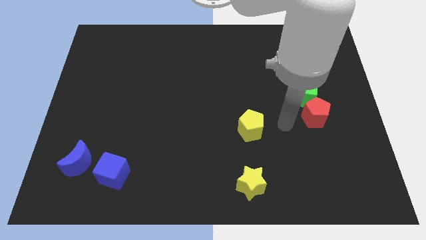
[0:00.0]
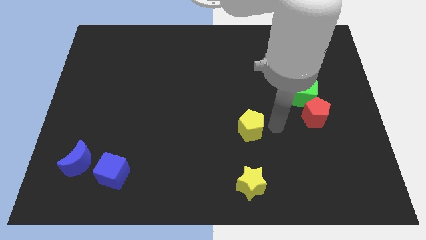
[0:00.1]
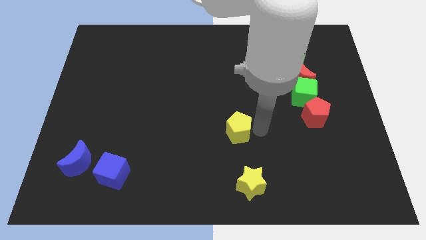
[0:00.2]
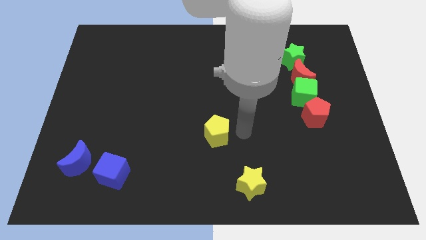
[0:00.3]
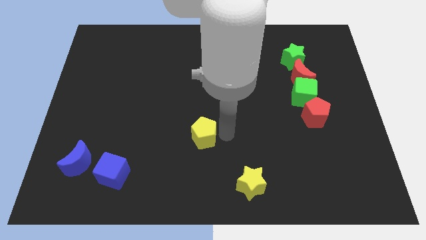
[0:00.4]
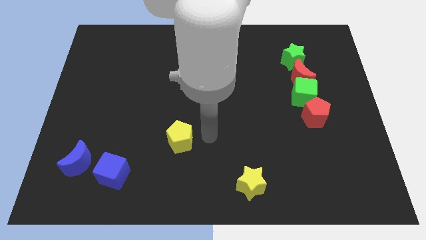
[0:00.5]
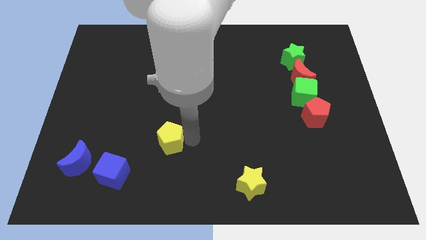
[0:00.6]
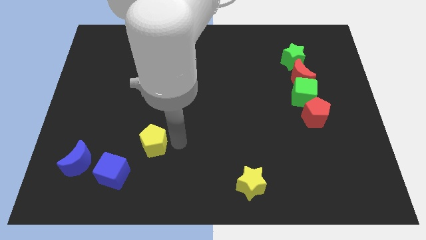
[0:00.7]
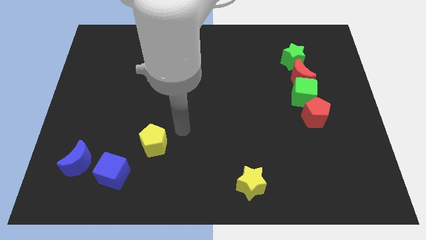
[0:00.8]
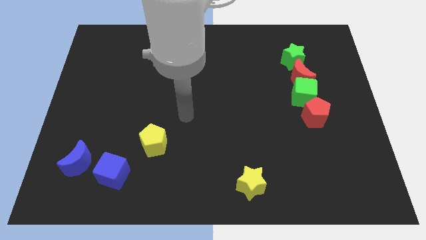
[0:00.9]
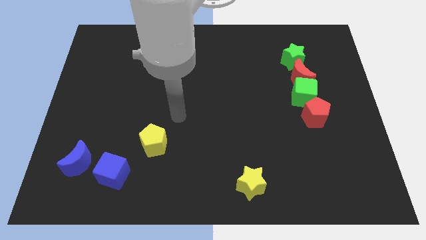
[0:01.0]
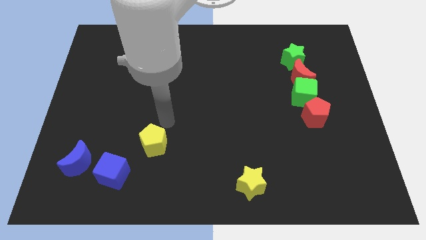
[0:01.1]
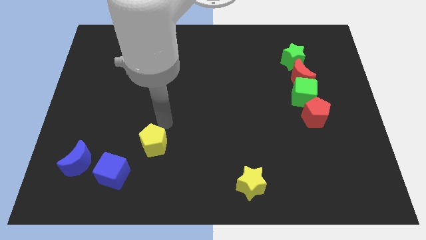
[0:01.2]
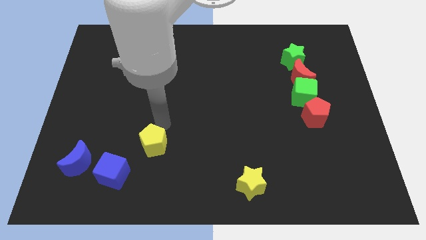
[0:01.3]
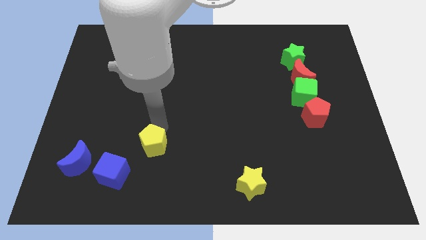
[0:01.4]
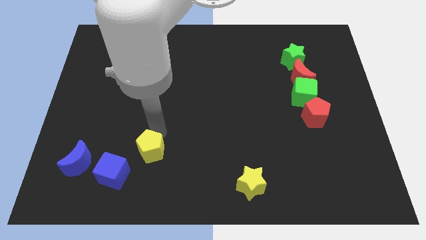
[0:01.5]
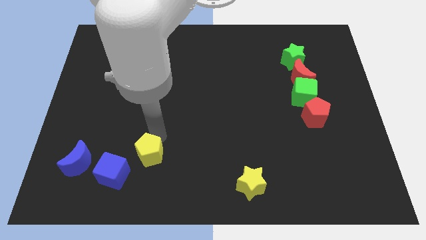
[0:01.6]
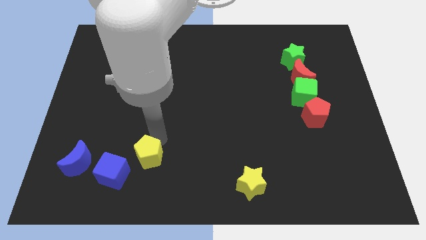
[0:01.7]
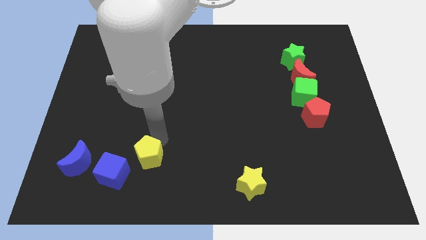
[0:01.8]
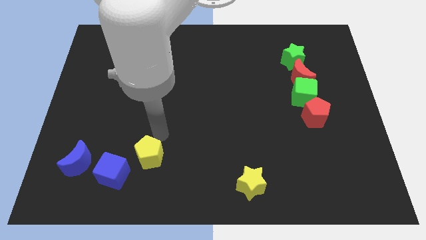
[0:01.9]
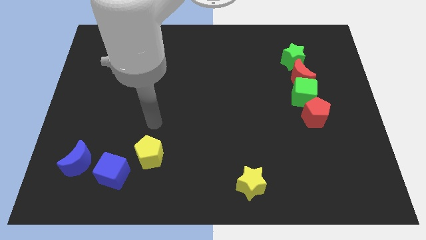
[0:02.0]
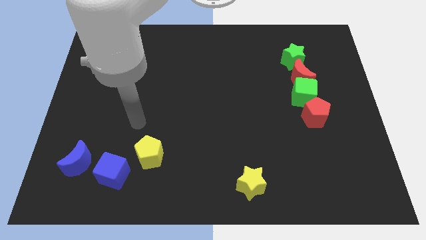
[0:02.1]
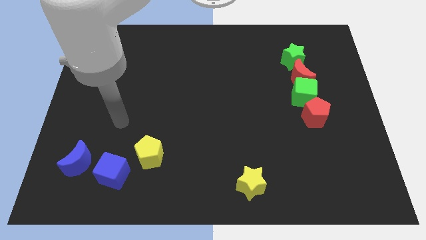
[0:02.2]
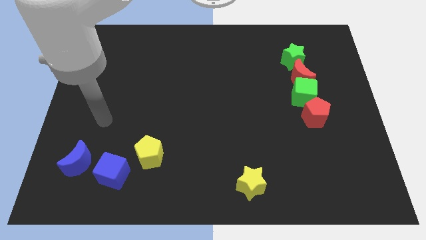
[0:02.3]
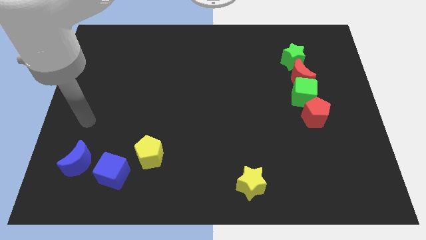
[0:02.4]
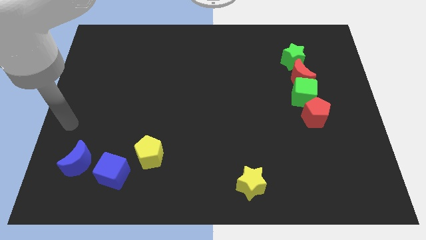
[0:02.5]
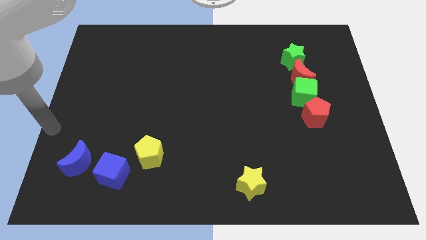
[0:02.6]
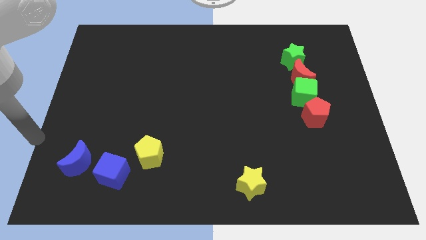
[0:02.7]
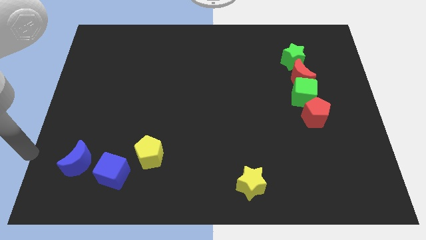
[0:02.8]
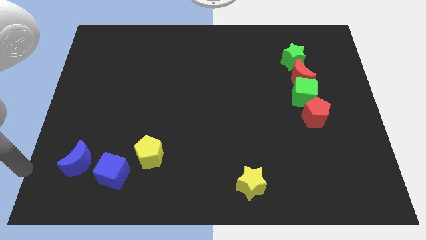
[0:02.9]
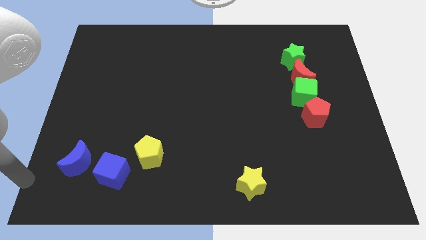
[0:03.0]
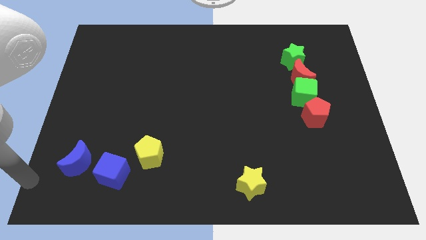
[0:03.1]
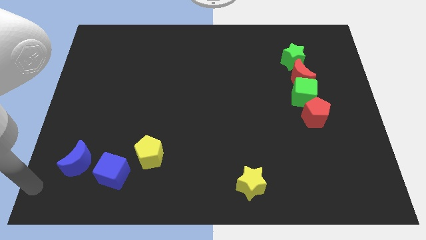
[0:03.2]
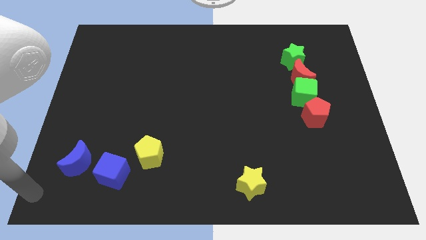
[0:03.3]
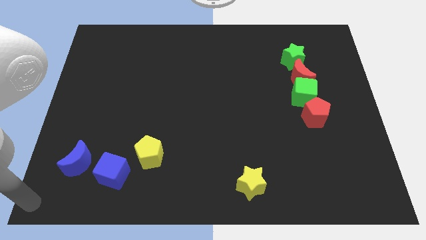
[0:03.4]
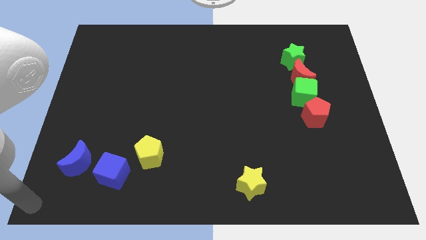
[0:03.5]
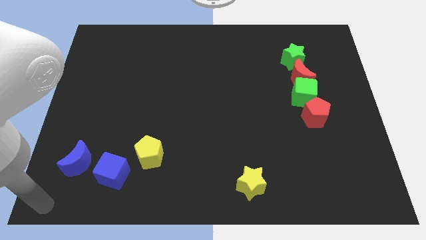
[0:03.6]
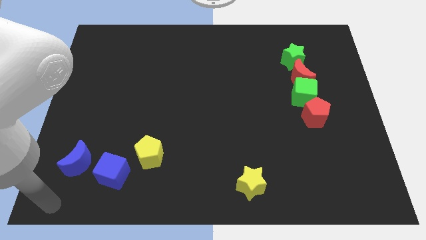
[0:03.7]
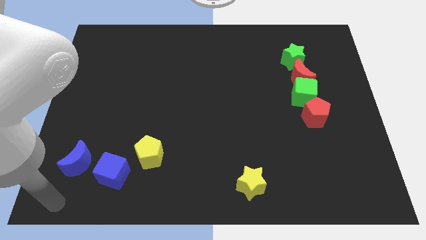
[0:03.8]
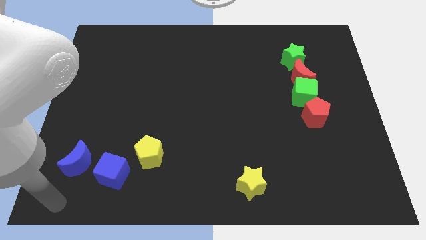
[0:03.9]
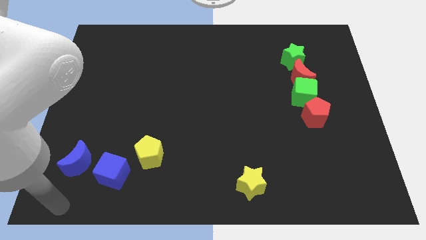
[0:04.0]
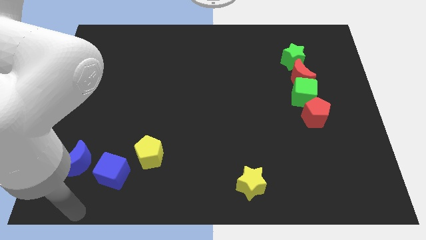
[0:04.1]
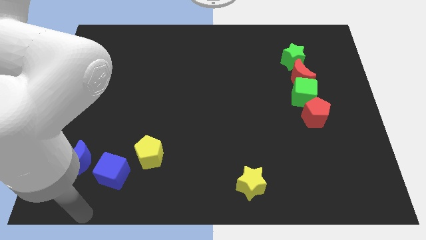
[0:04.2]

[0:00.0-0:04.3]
move the yellow pentagon to the bottom of the board

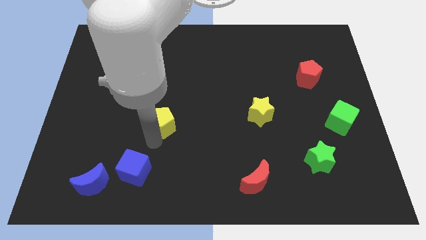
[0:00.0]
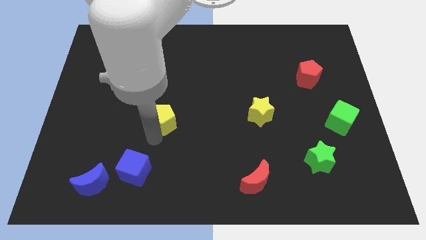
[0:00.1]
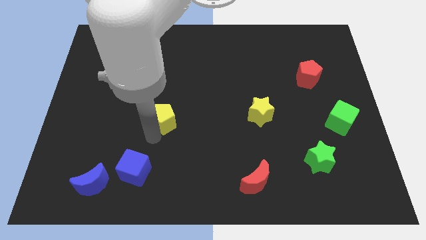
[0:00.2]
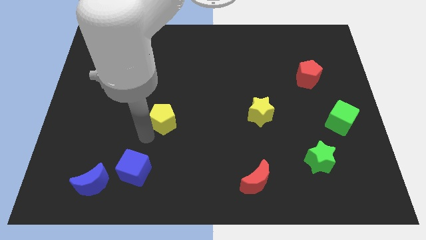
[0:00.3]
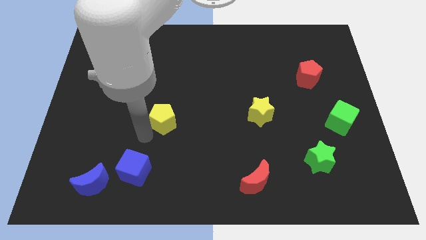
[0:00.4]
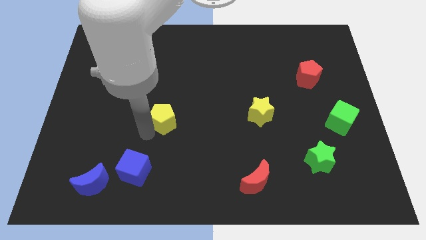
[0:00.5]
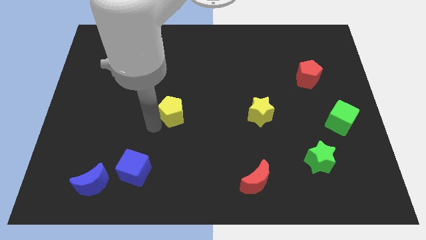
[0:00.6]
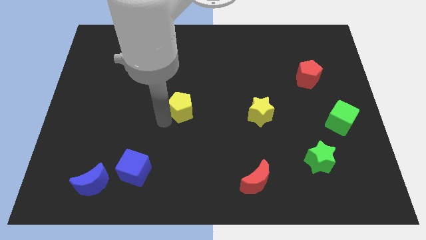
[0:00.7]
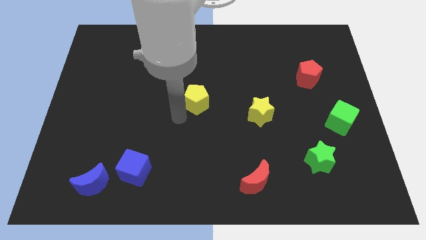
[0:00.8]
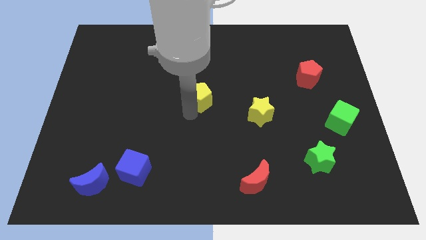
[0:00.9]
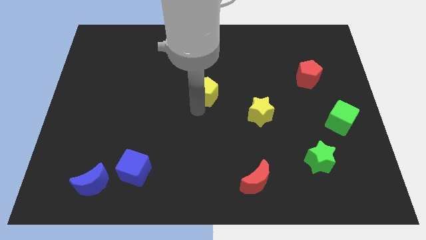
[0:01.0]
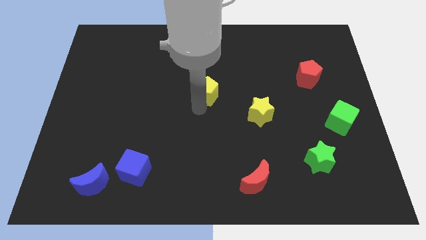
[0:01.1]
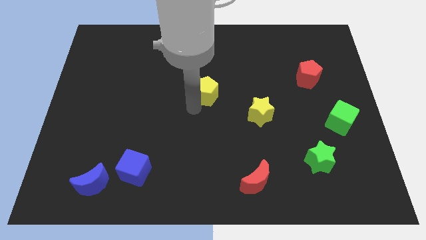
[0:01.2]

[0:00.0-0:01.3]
push the yellow pentagon to the center of the board

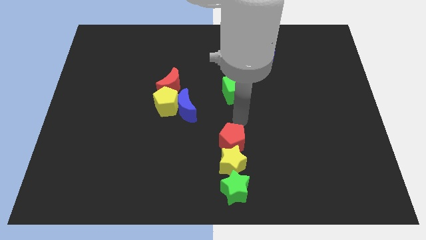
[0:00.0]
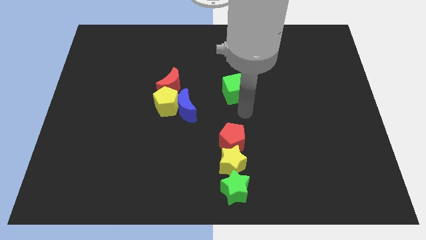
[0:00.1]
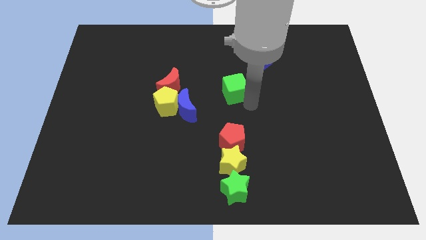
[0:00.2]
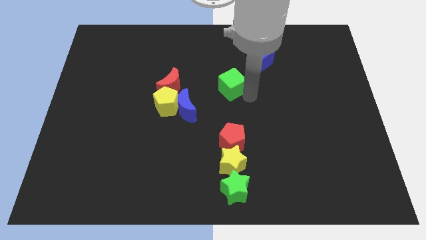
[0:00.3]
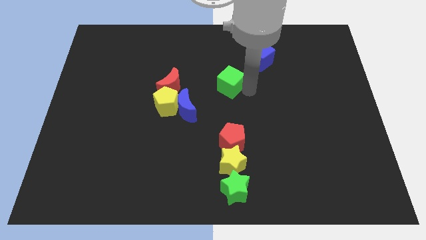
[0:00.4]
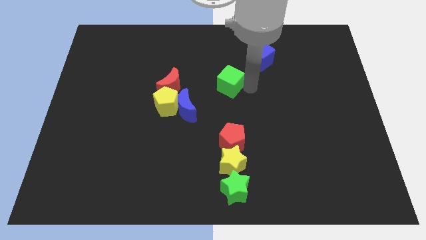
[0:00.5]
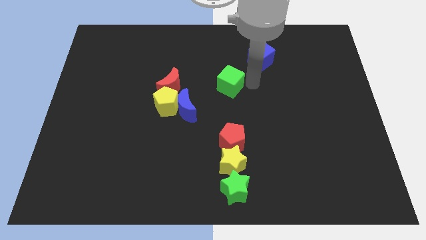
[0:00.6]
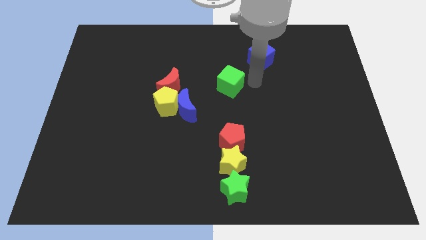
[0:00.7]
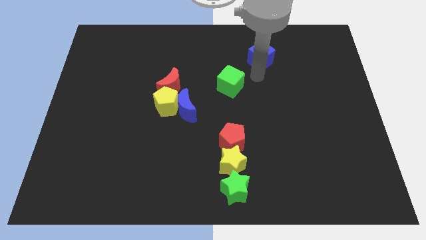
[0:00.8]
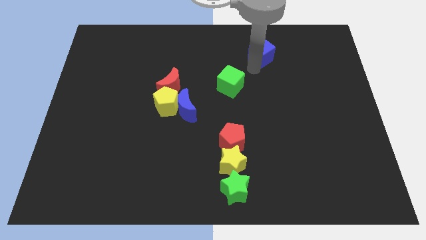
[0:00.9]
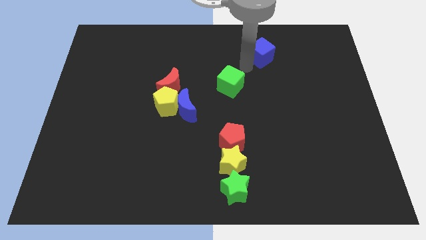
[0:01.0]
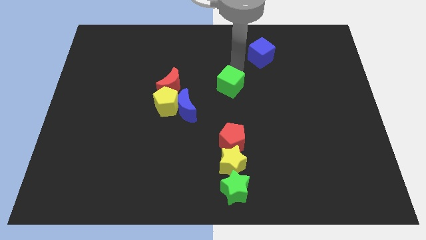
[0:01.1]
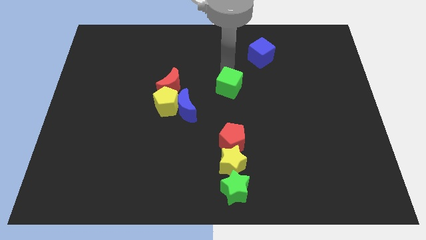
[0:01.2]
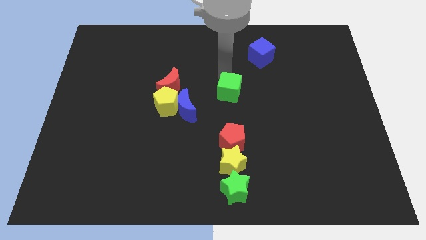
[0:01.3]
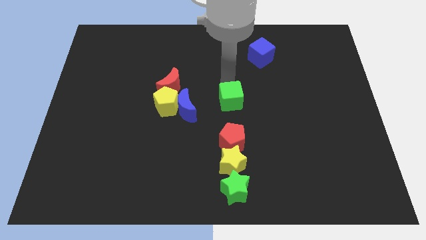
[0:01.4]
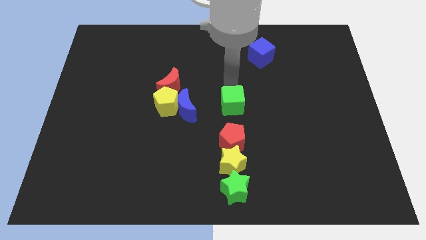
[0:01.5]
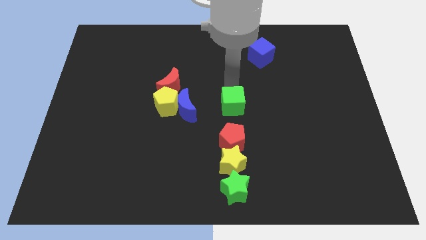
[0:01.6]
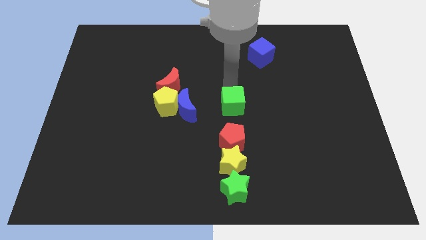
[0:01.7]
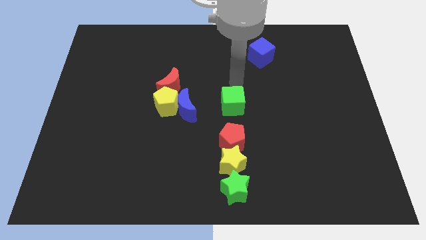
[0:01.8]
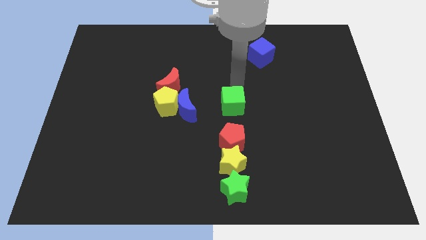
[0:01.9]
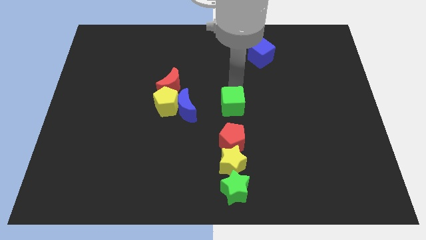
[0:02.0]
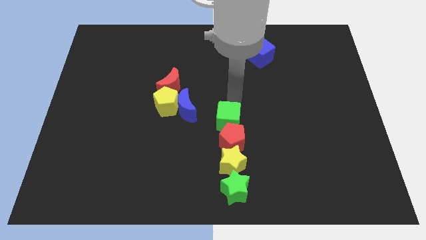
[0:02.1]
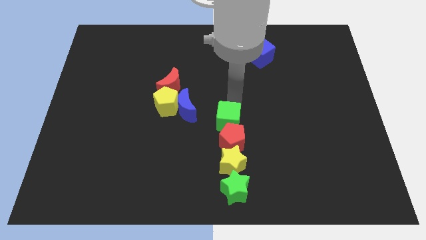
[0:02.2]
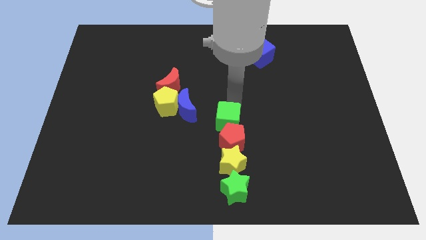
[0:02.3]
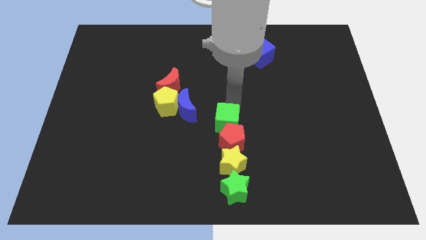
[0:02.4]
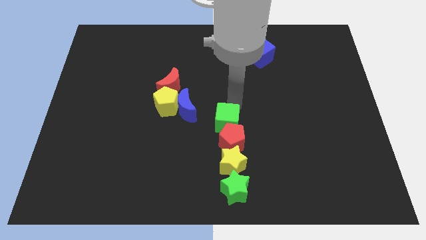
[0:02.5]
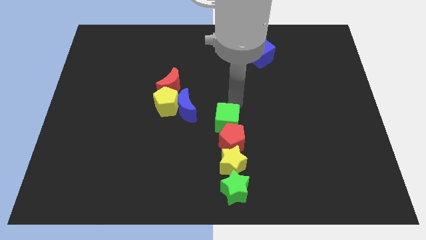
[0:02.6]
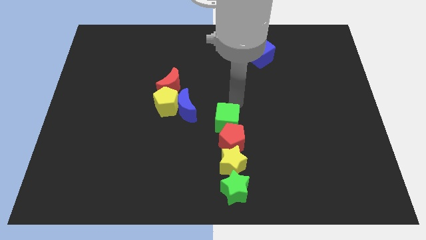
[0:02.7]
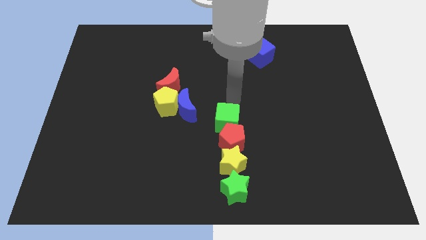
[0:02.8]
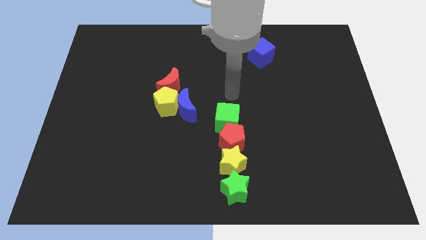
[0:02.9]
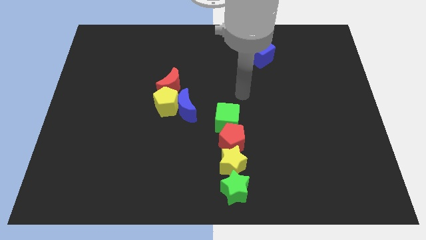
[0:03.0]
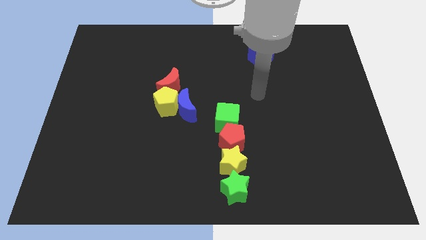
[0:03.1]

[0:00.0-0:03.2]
place the green cube on the top of red pentagon

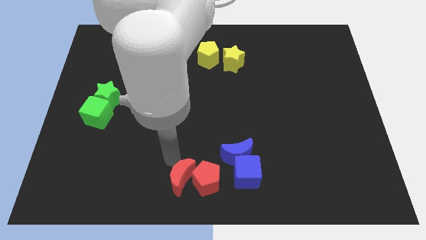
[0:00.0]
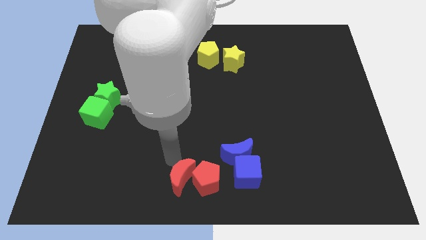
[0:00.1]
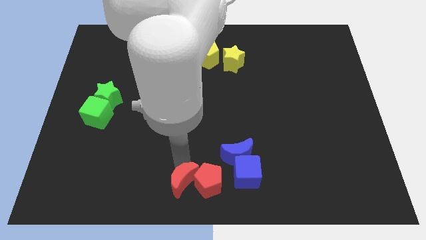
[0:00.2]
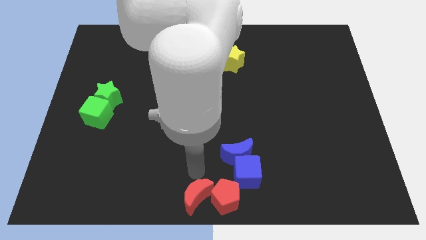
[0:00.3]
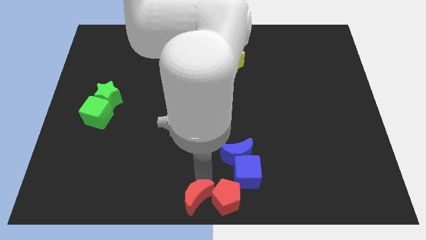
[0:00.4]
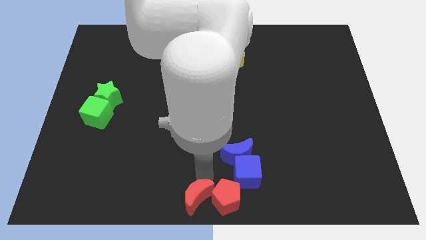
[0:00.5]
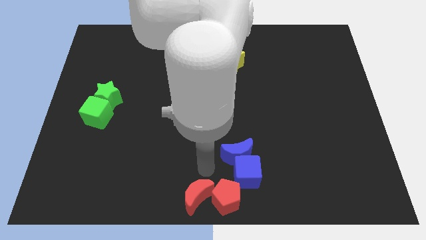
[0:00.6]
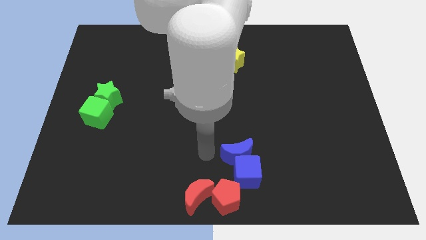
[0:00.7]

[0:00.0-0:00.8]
move the red pentagon to the bottom center with the red moon
